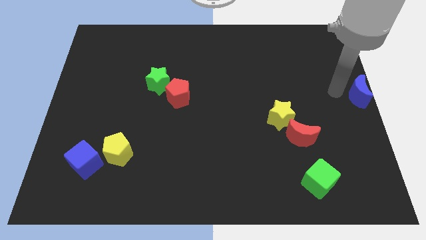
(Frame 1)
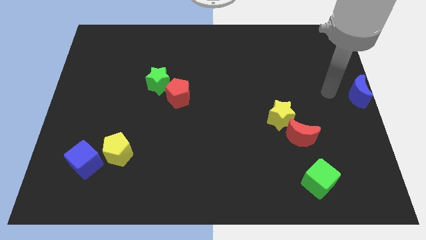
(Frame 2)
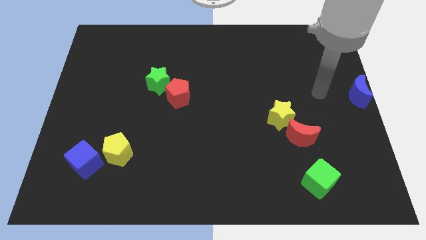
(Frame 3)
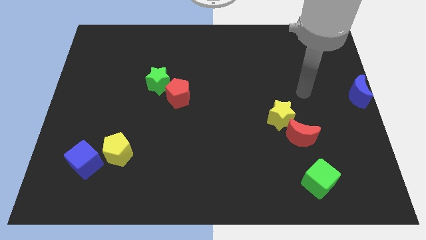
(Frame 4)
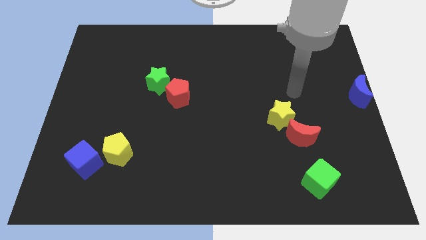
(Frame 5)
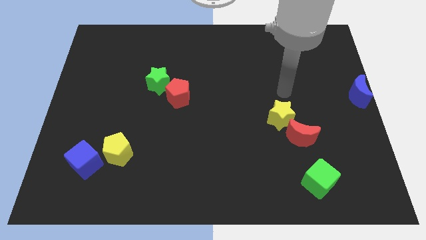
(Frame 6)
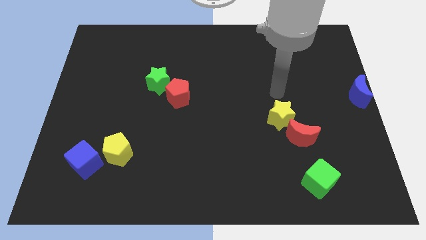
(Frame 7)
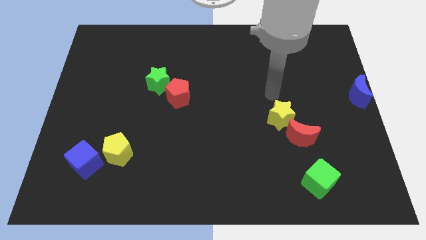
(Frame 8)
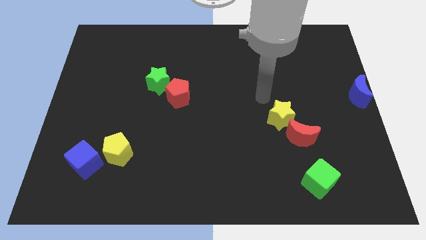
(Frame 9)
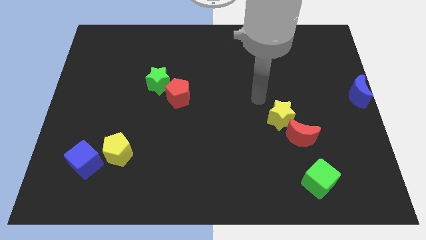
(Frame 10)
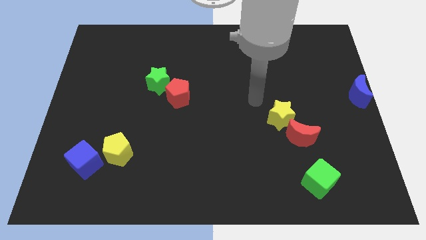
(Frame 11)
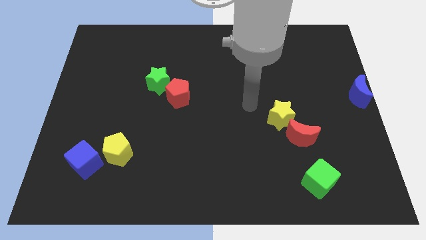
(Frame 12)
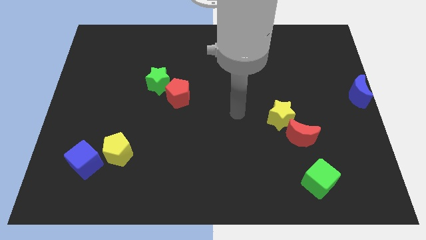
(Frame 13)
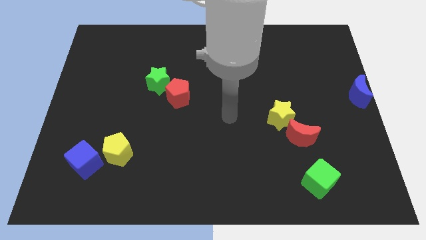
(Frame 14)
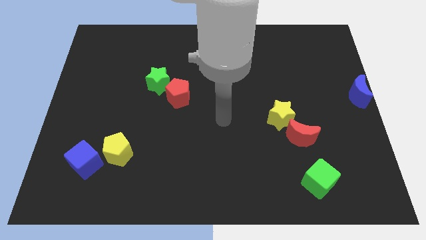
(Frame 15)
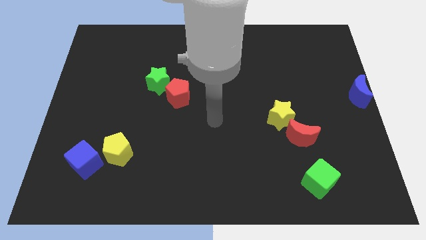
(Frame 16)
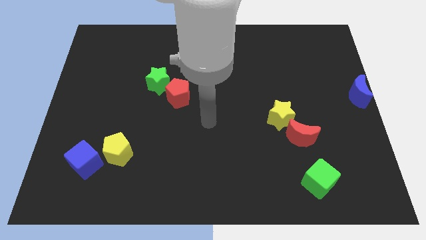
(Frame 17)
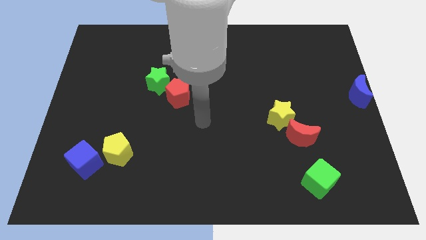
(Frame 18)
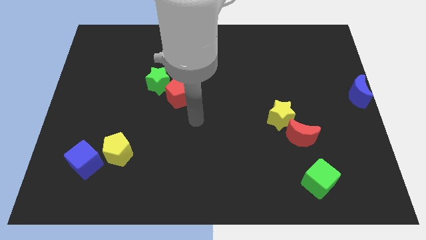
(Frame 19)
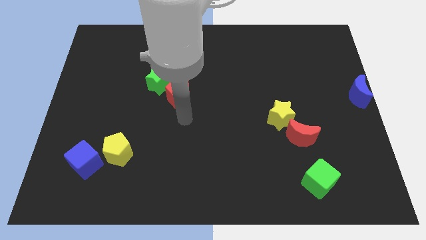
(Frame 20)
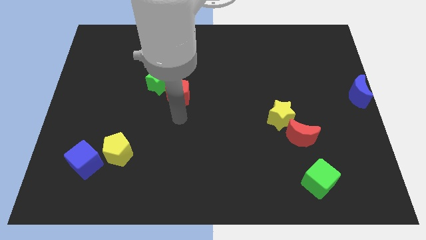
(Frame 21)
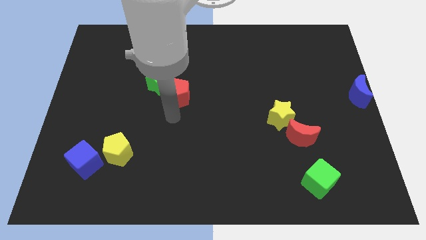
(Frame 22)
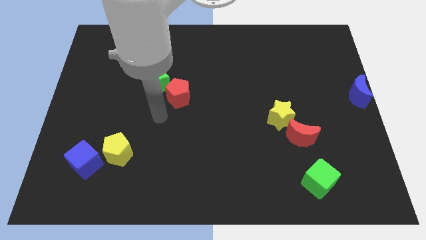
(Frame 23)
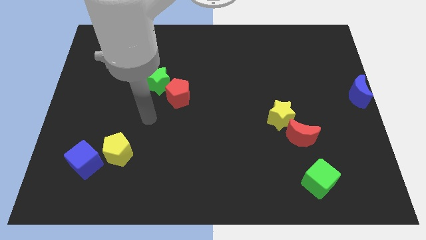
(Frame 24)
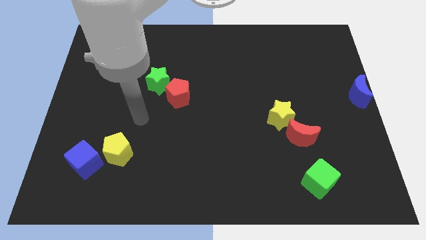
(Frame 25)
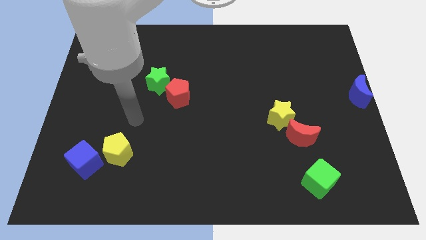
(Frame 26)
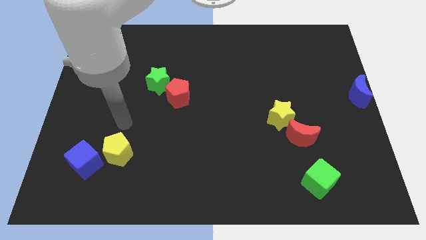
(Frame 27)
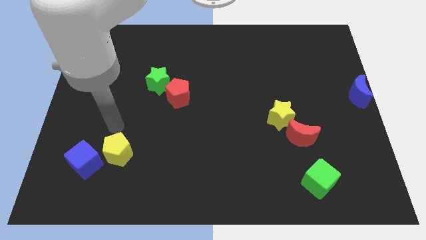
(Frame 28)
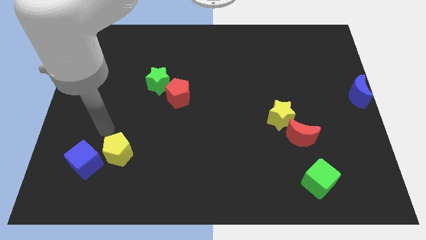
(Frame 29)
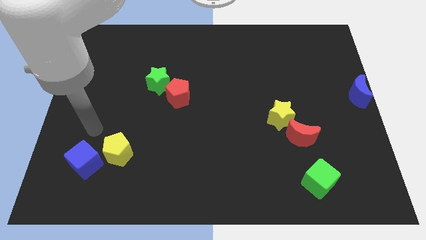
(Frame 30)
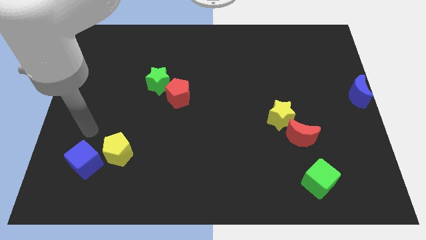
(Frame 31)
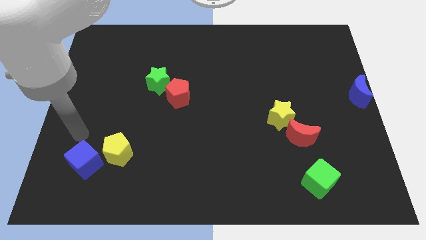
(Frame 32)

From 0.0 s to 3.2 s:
point the arm to the left of the yellow pentagon

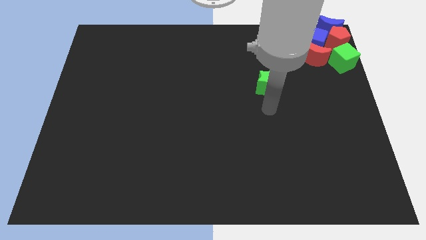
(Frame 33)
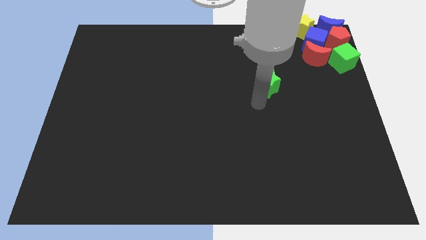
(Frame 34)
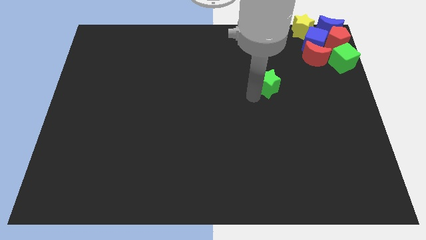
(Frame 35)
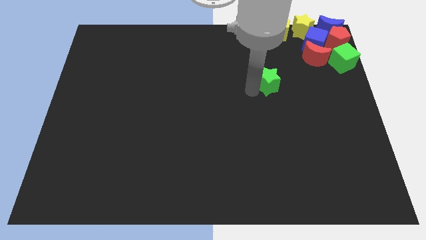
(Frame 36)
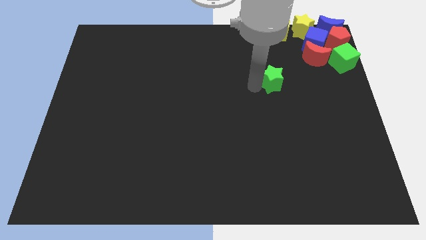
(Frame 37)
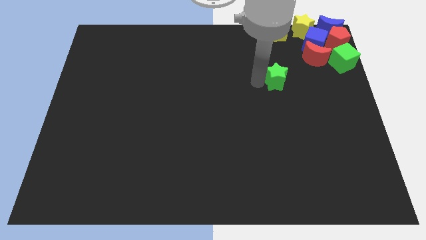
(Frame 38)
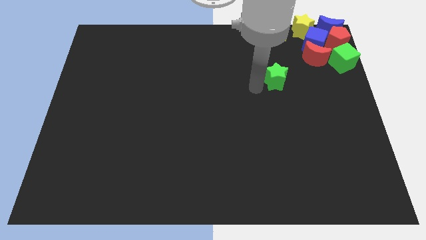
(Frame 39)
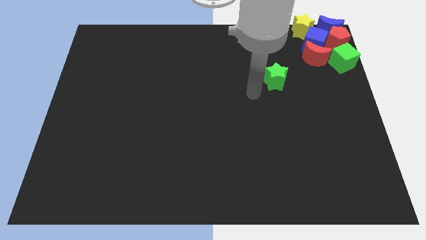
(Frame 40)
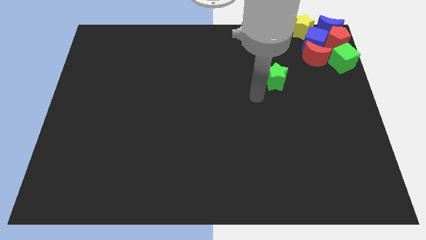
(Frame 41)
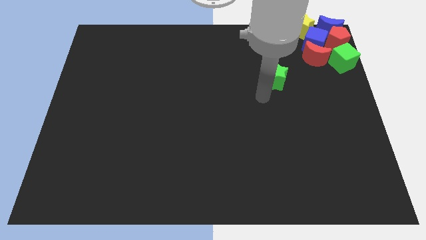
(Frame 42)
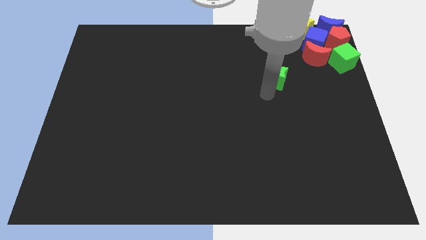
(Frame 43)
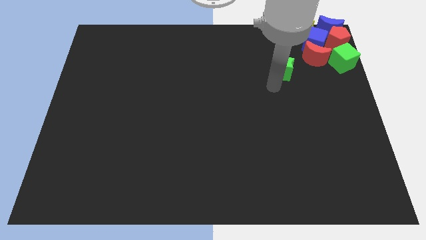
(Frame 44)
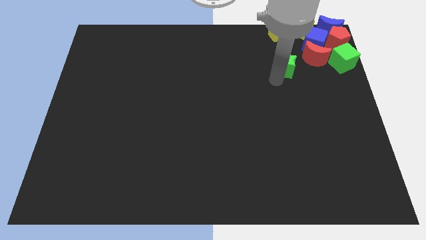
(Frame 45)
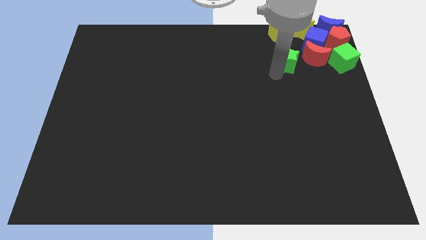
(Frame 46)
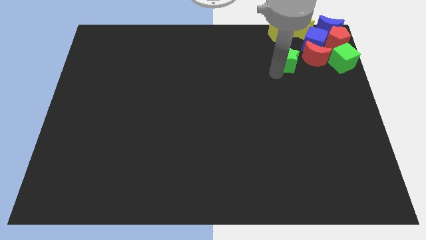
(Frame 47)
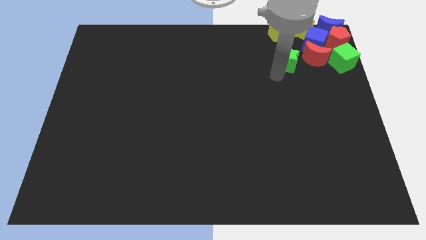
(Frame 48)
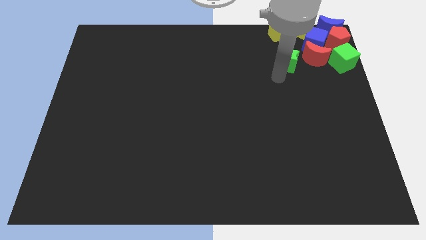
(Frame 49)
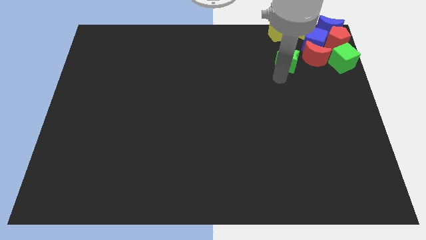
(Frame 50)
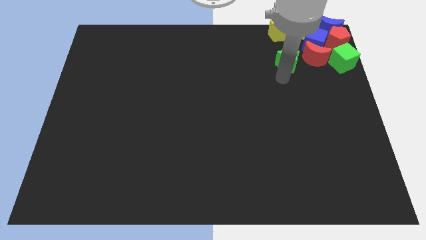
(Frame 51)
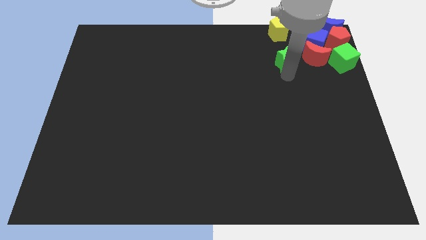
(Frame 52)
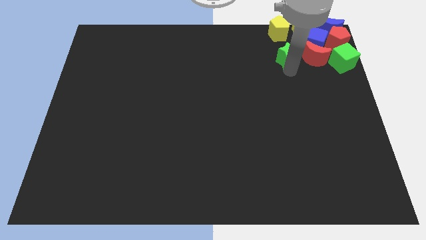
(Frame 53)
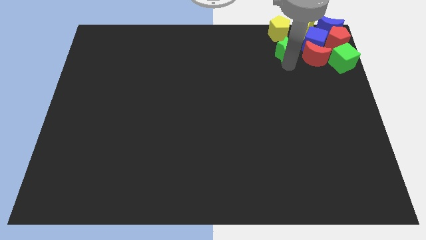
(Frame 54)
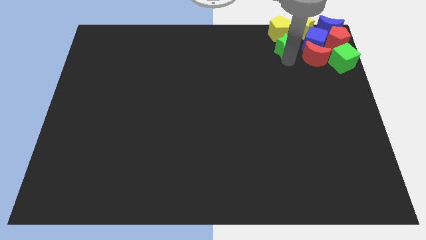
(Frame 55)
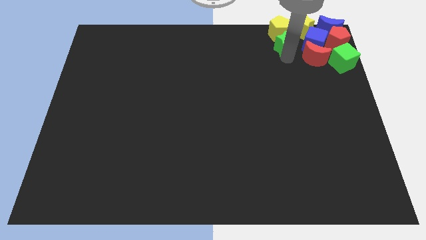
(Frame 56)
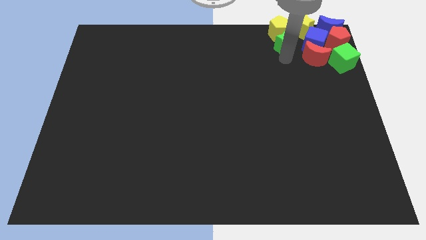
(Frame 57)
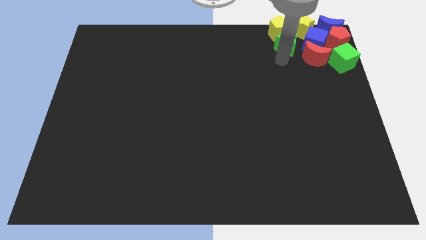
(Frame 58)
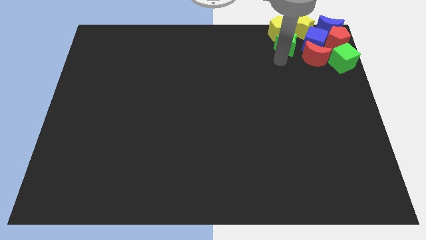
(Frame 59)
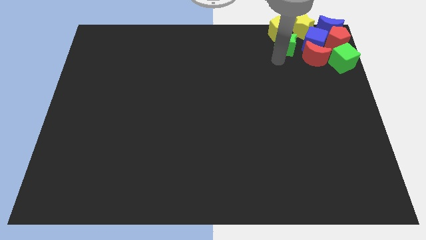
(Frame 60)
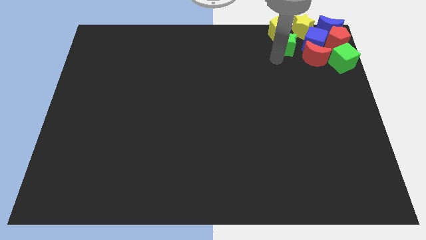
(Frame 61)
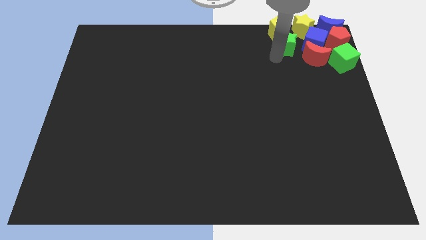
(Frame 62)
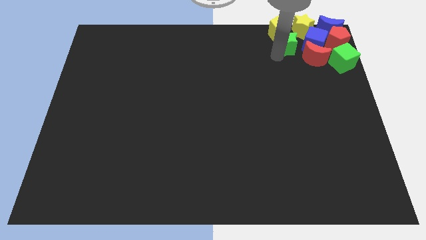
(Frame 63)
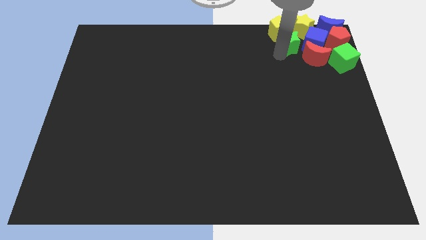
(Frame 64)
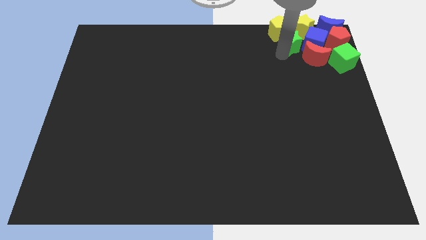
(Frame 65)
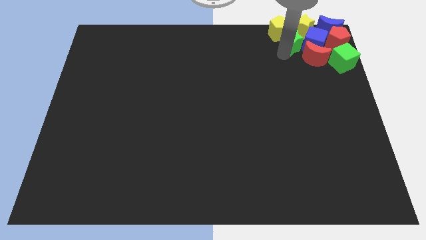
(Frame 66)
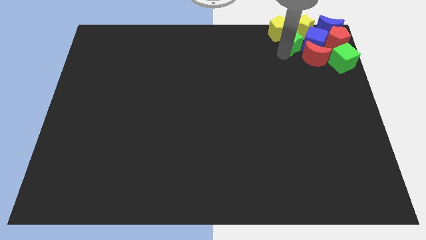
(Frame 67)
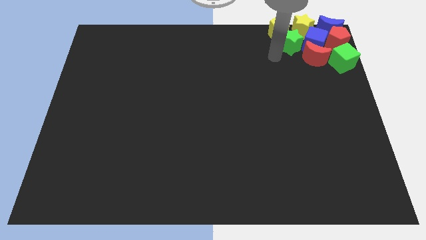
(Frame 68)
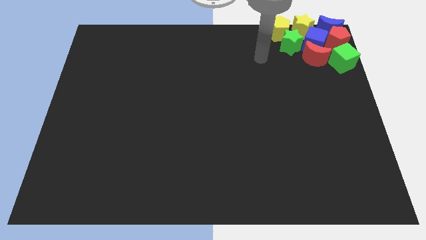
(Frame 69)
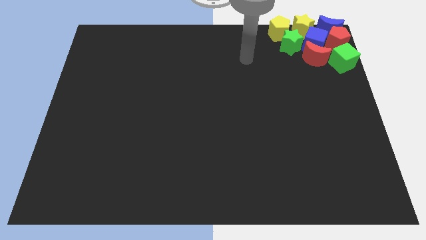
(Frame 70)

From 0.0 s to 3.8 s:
move the green star to the bottom of the yellow pentagon

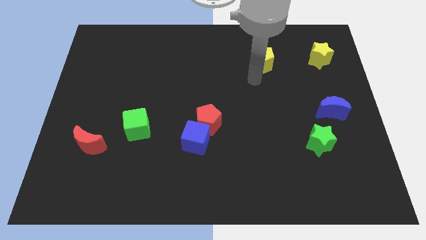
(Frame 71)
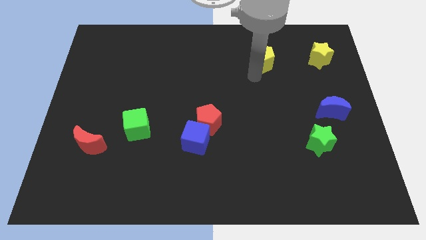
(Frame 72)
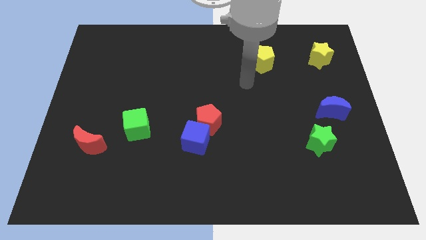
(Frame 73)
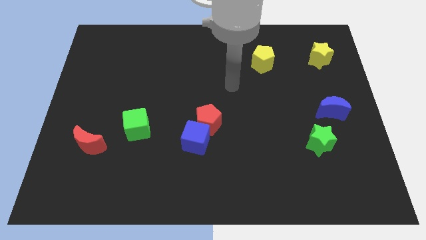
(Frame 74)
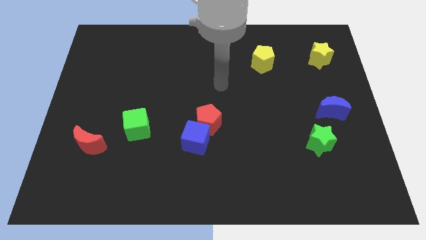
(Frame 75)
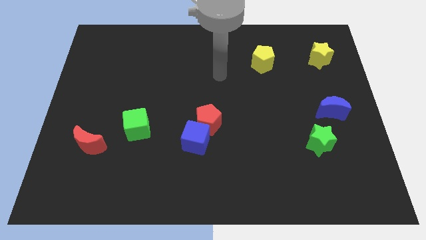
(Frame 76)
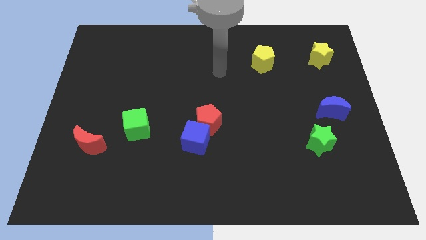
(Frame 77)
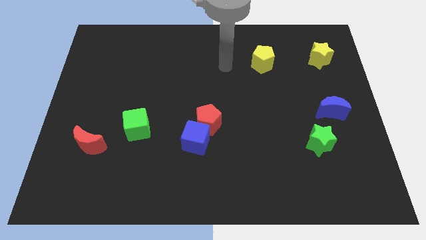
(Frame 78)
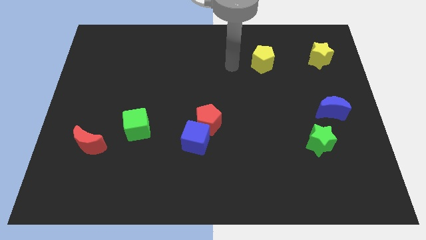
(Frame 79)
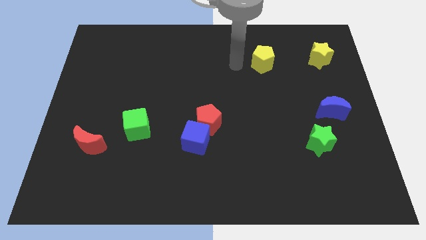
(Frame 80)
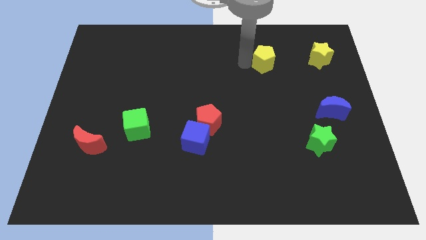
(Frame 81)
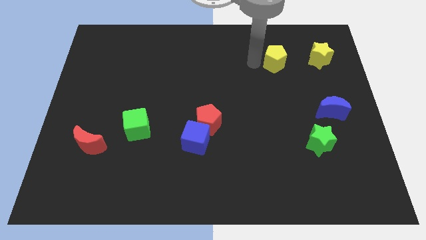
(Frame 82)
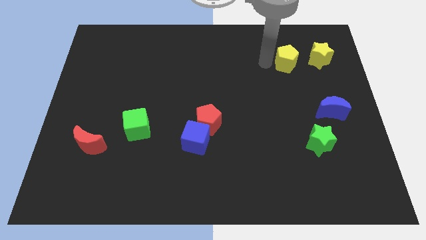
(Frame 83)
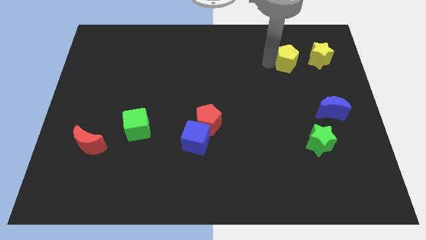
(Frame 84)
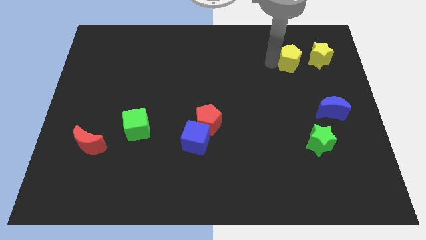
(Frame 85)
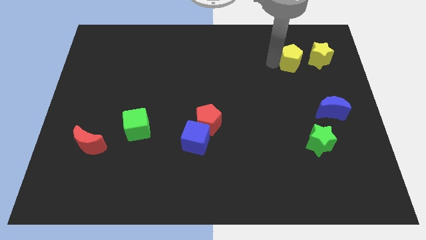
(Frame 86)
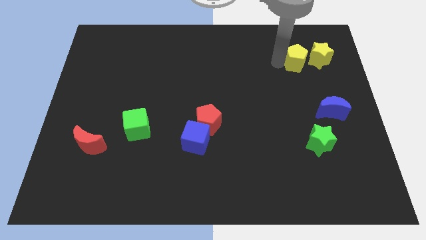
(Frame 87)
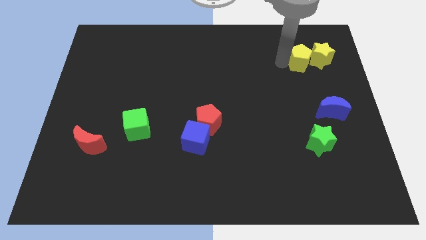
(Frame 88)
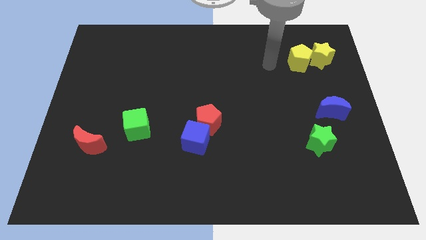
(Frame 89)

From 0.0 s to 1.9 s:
place the yellow pentagon to the bottom left of the yellow star
